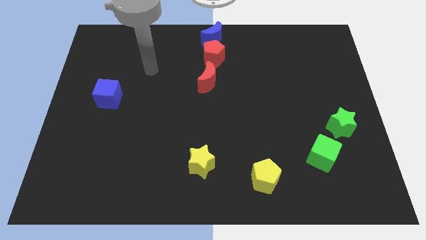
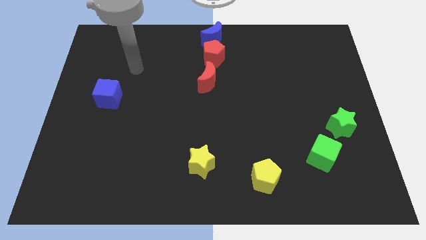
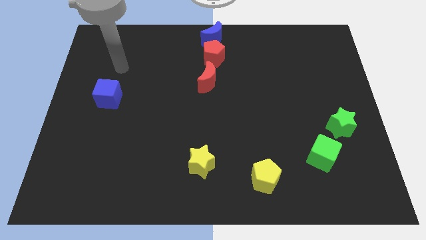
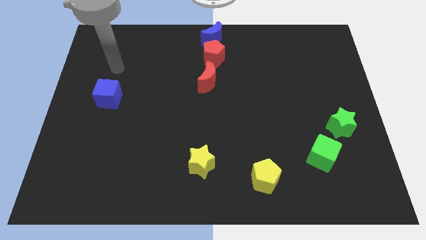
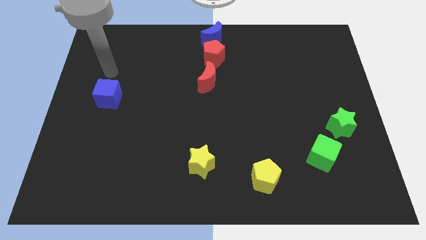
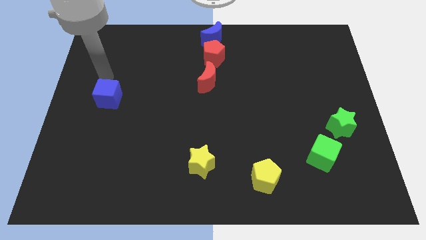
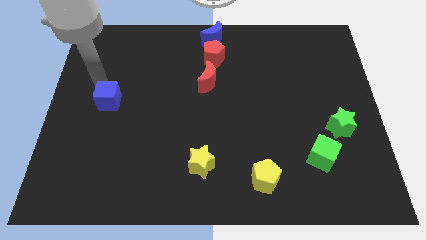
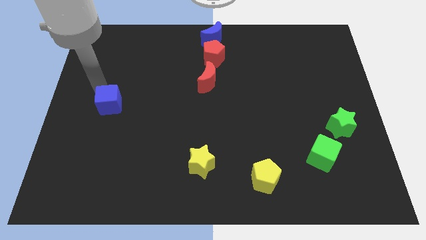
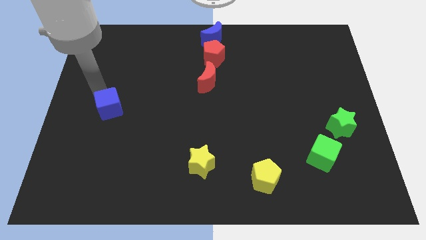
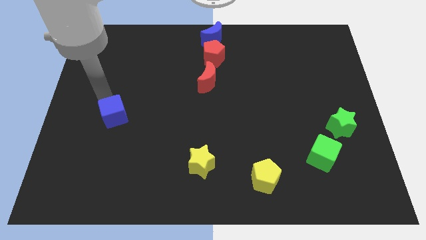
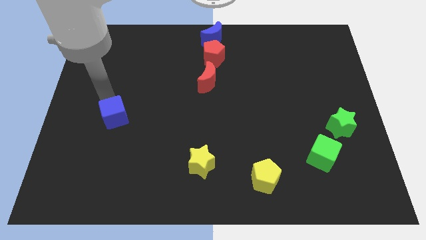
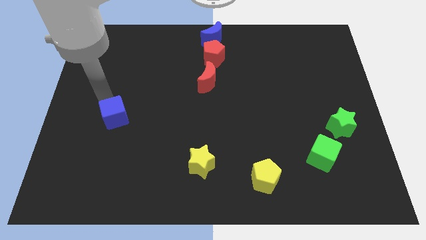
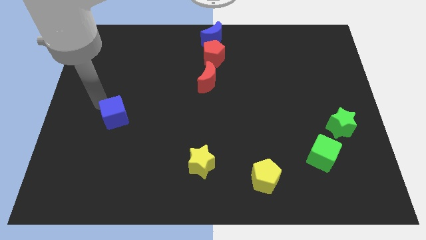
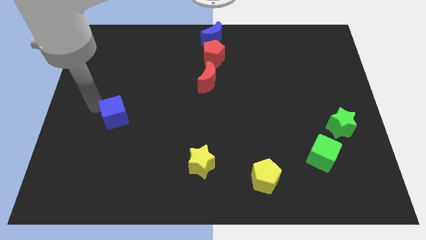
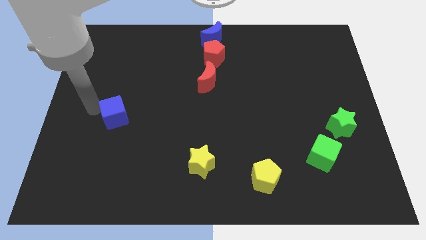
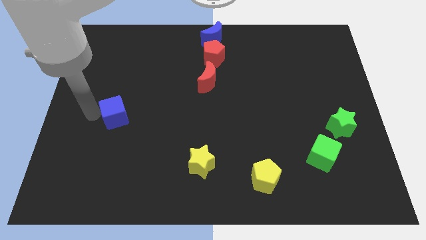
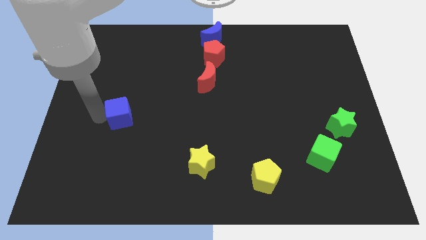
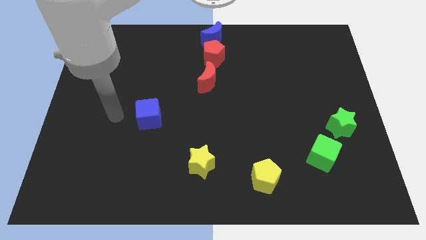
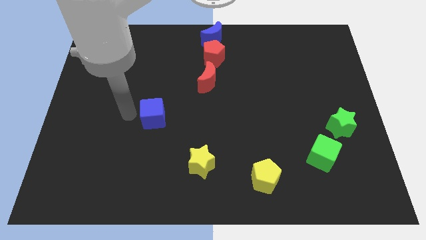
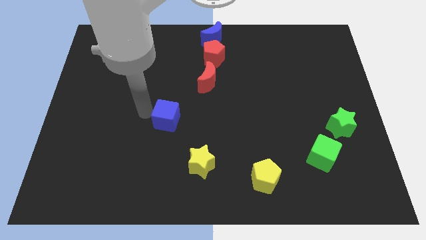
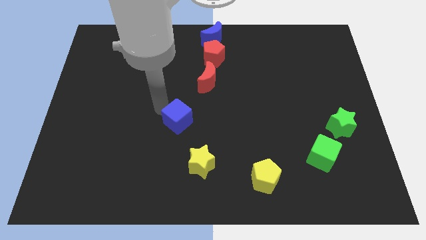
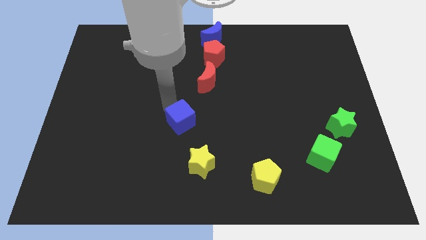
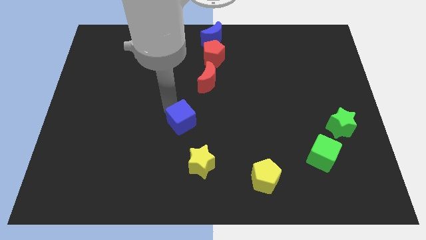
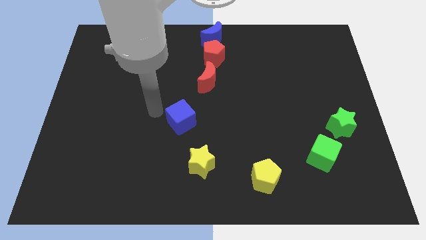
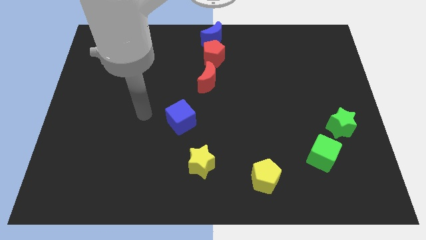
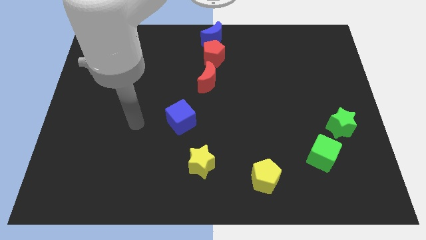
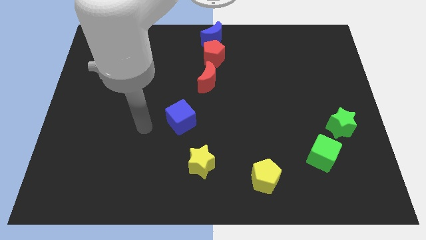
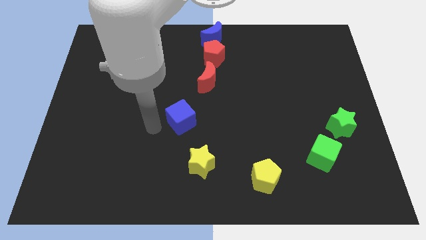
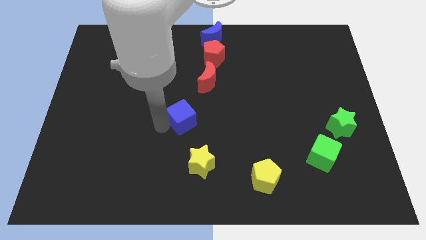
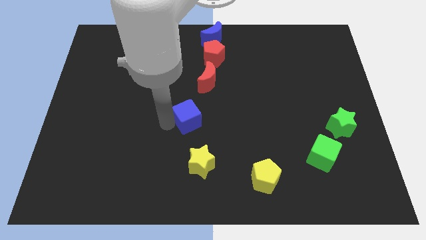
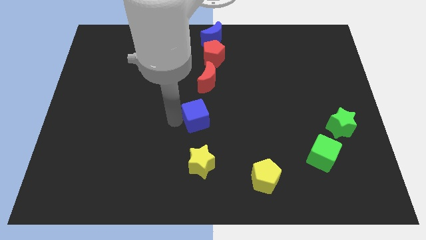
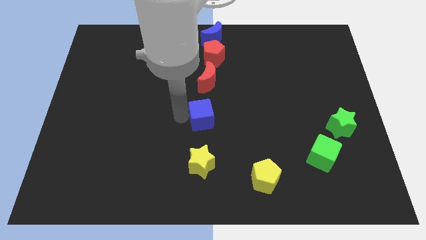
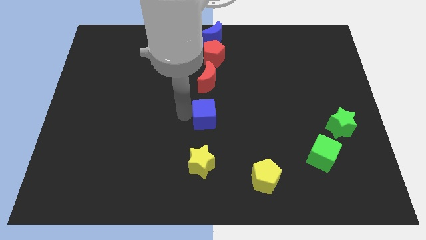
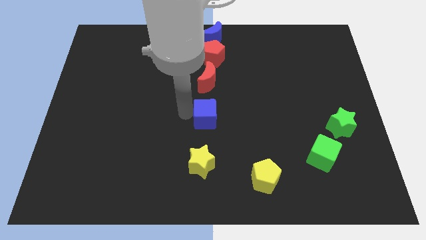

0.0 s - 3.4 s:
push blue cube below red crescent

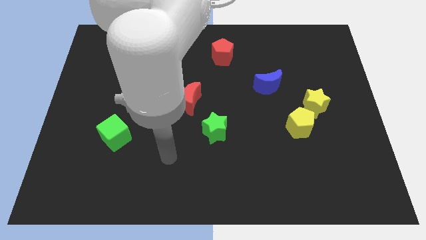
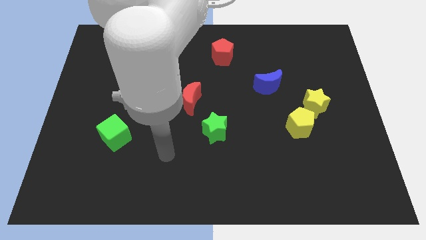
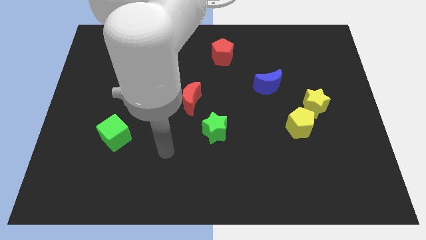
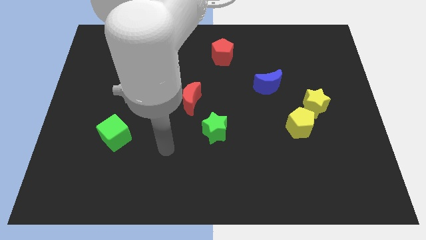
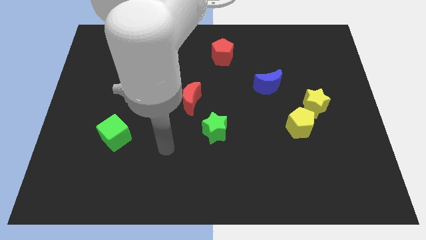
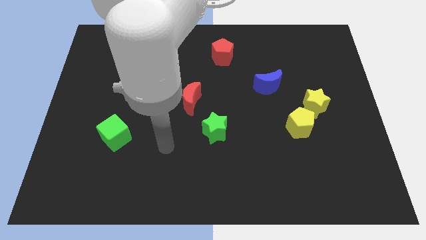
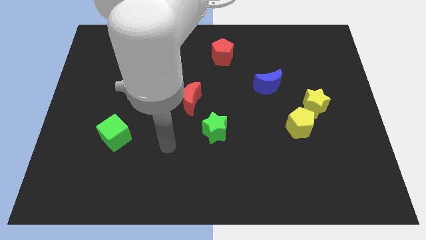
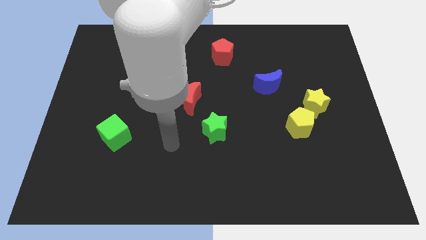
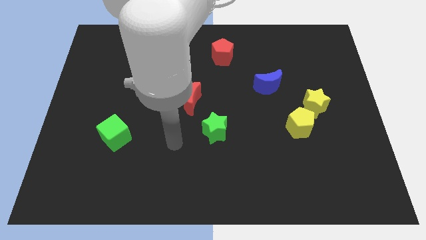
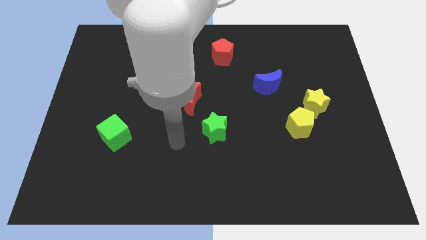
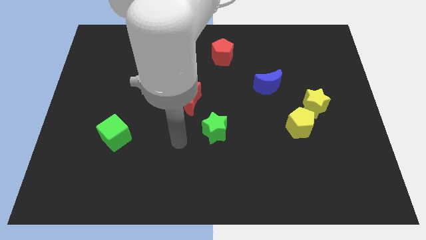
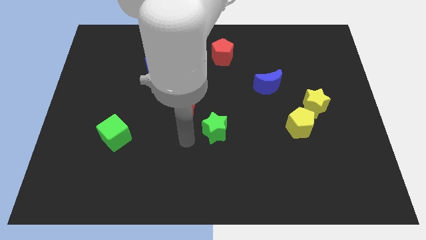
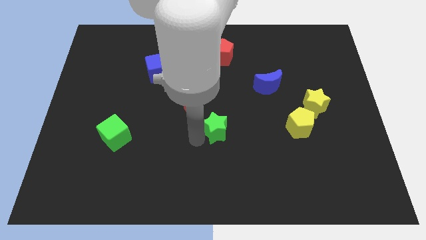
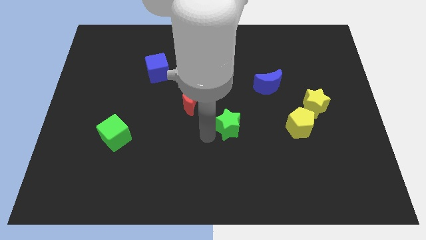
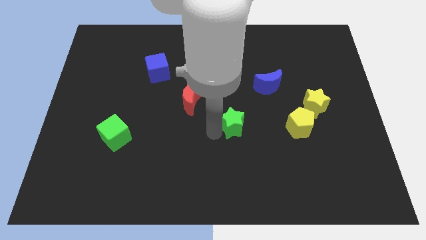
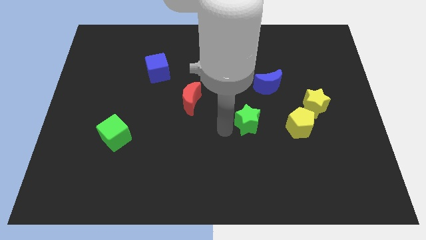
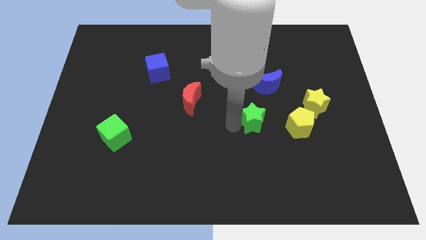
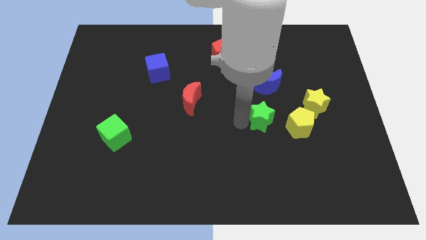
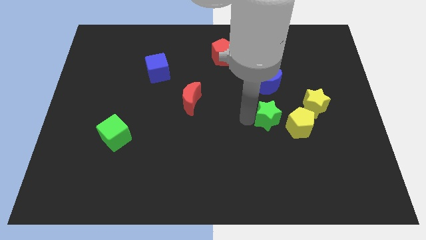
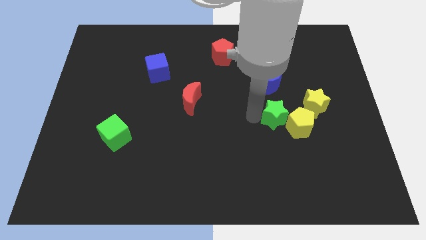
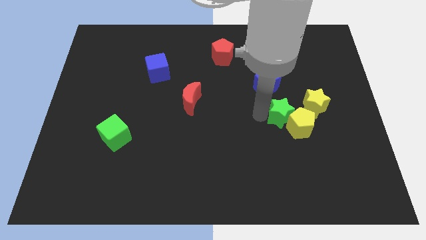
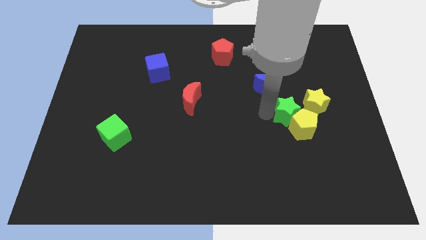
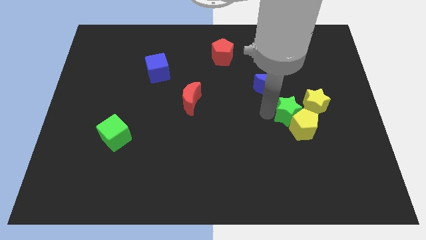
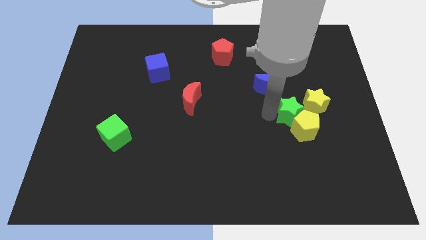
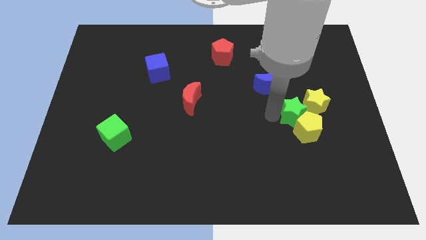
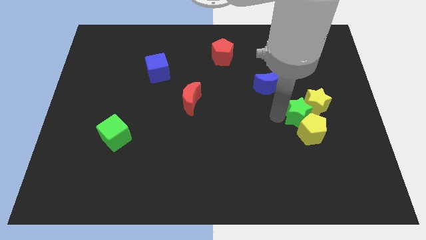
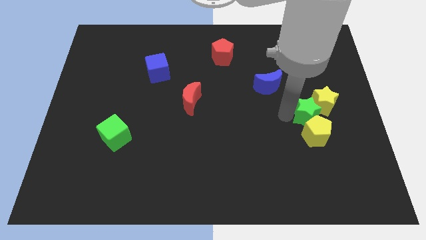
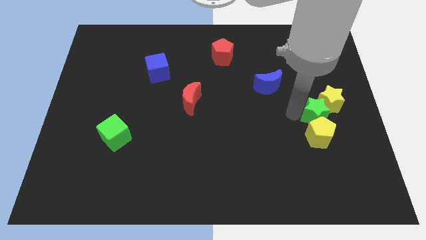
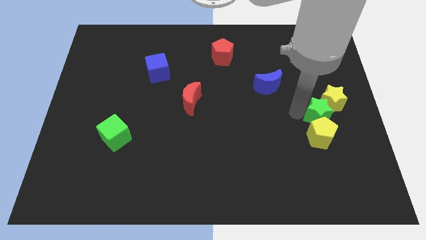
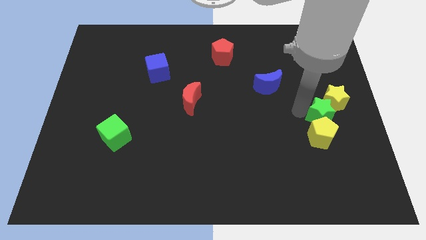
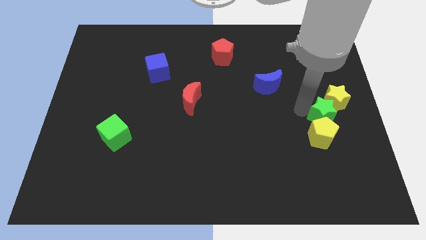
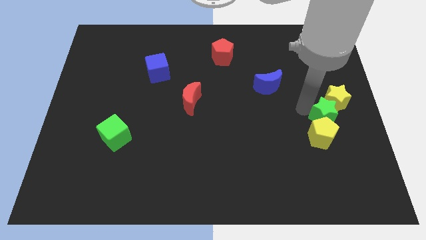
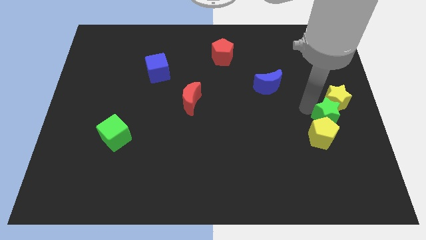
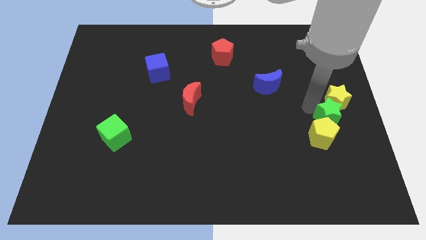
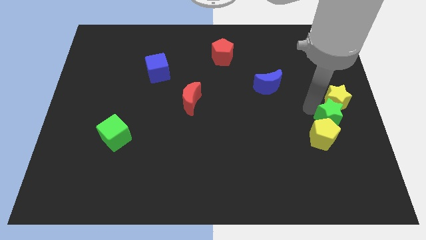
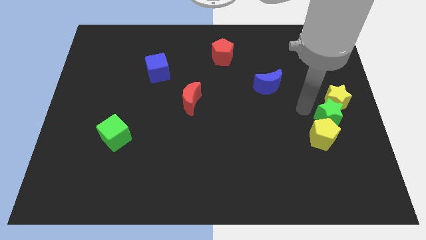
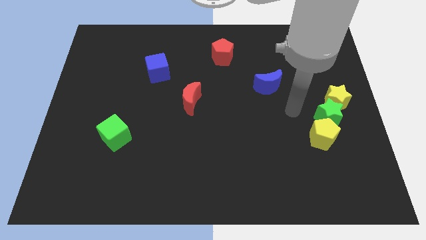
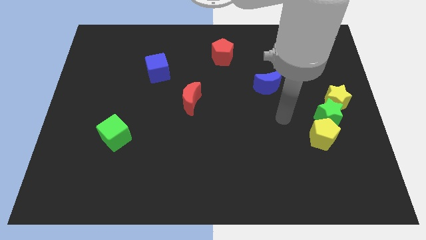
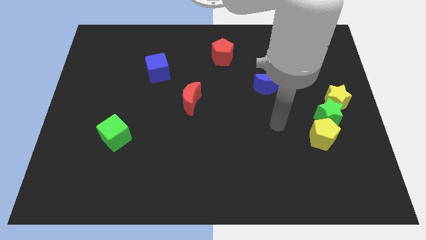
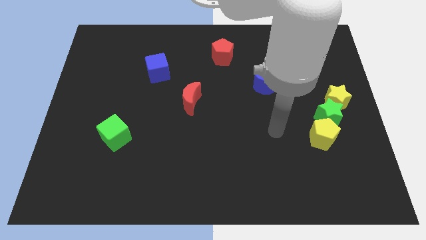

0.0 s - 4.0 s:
place the green star diagonal in between yellow star and yellow pentagon

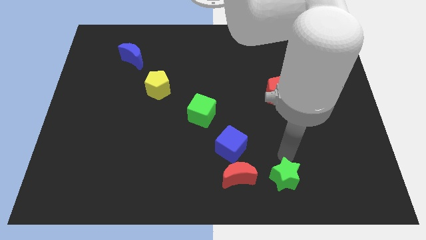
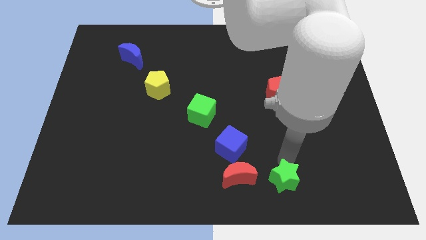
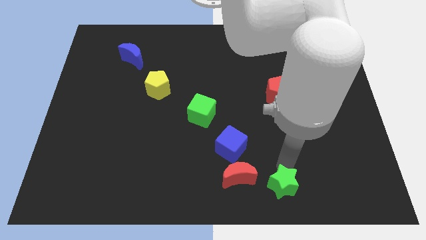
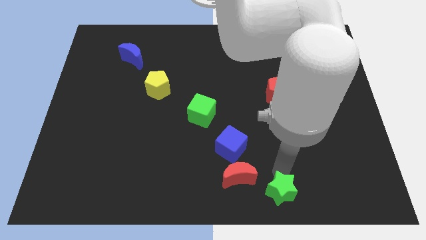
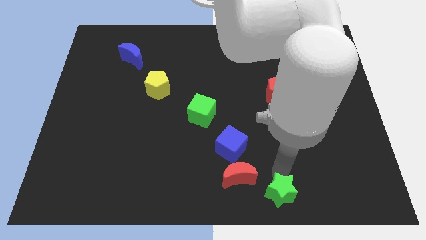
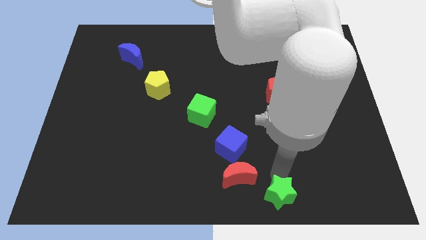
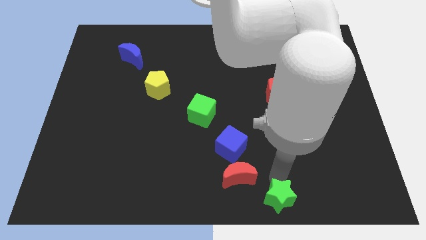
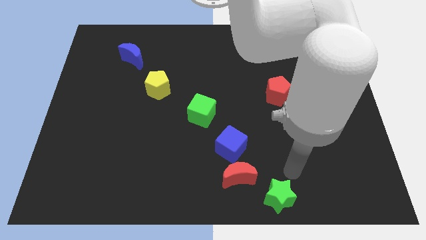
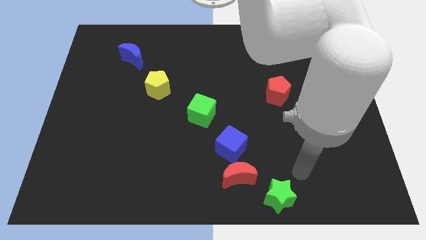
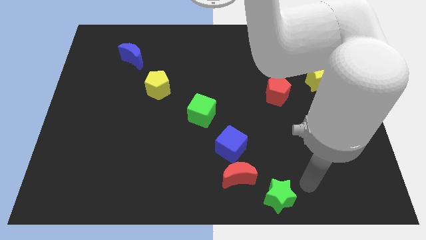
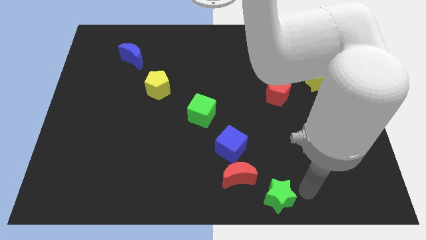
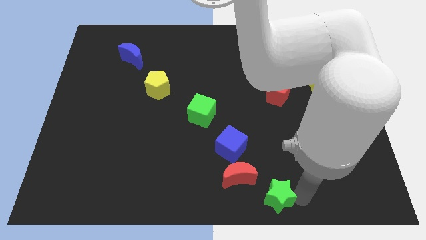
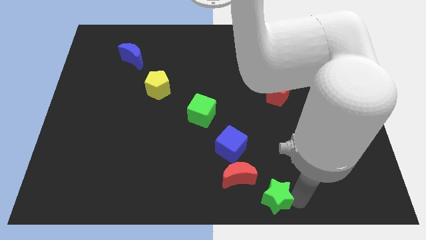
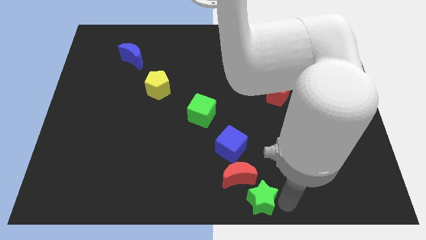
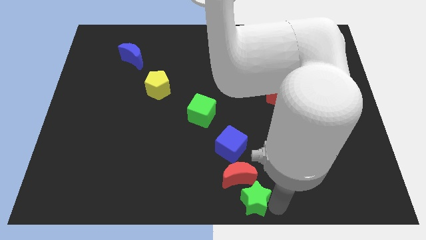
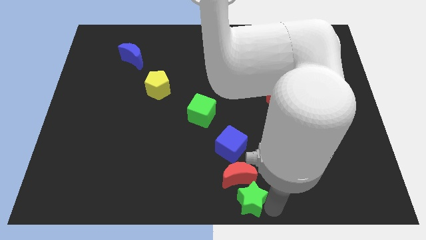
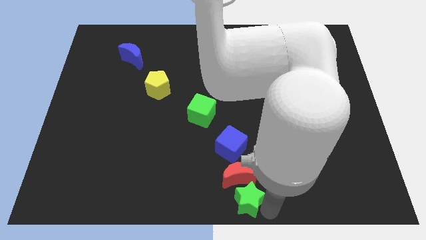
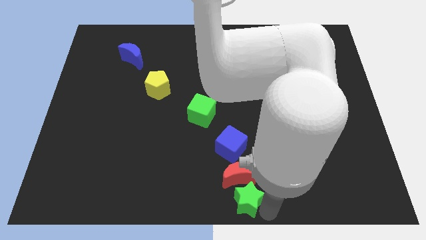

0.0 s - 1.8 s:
push the green star towards down the red crescent
